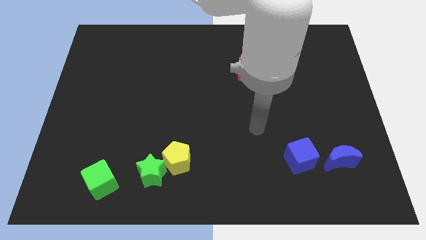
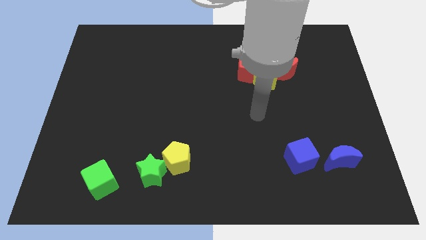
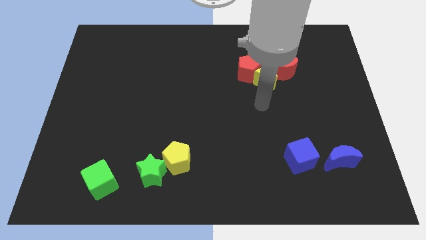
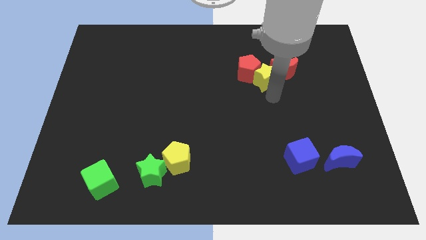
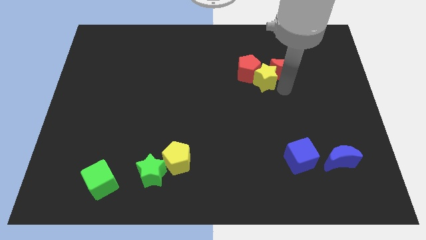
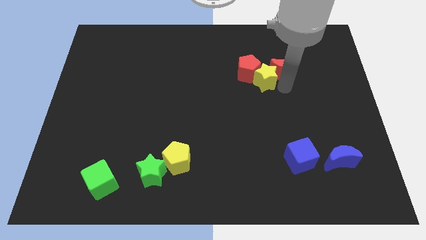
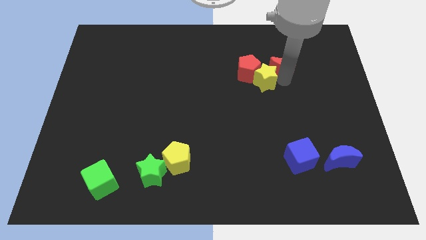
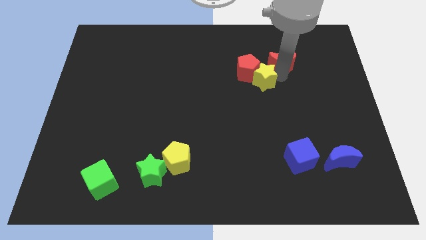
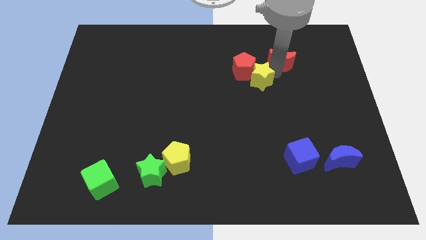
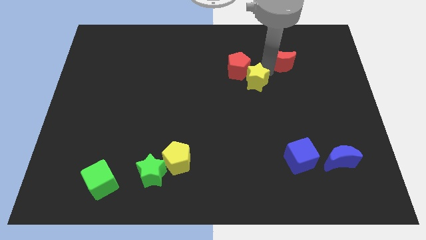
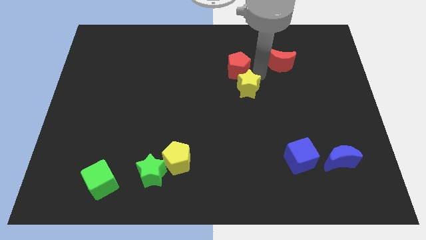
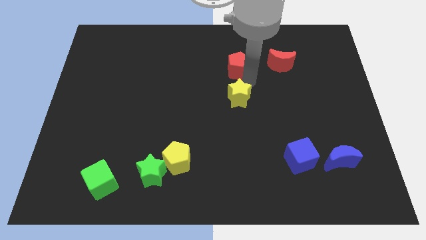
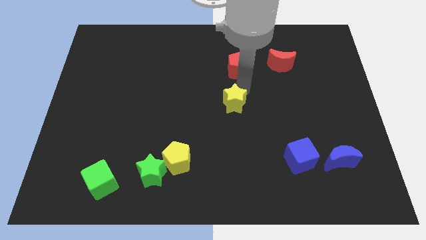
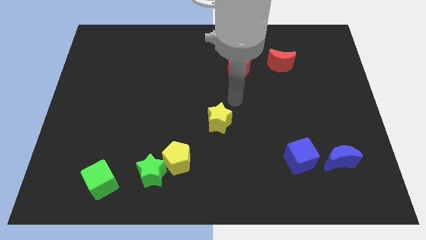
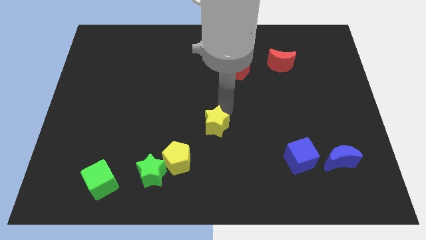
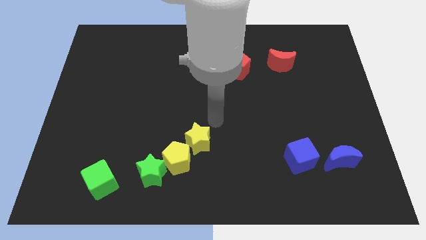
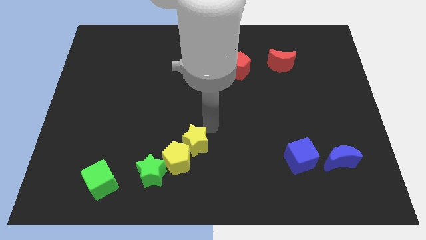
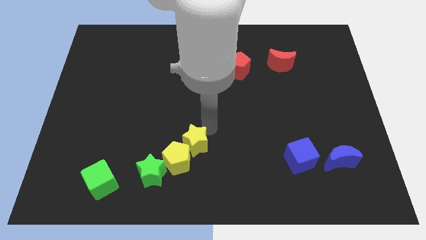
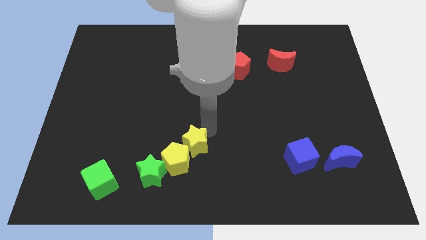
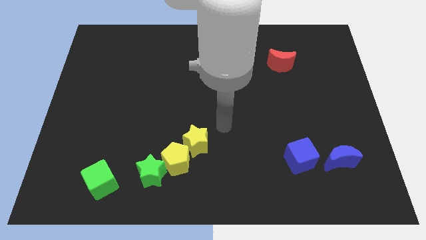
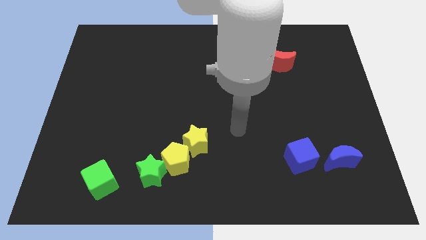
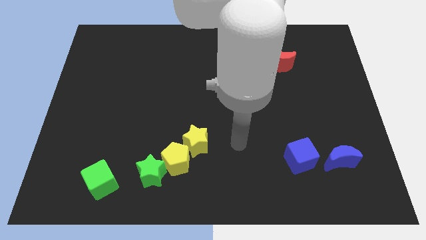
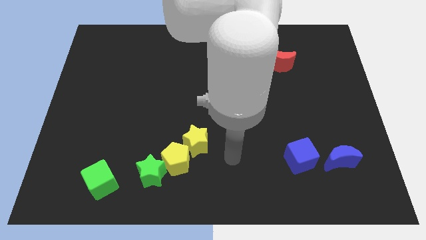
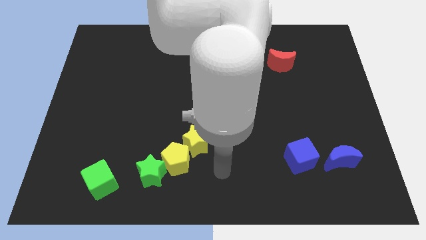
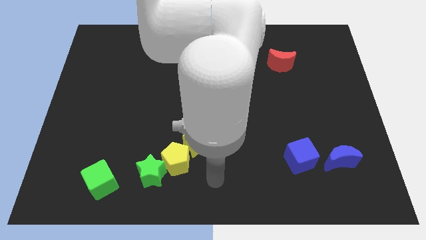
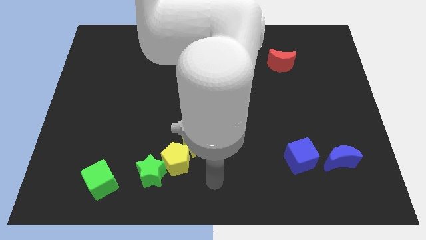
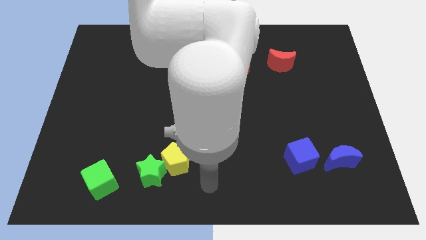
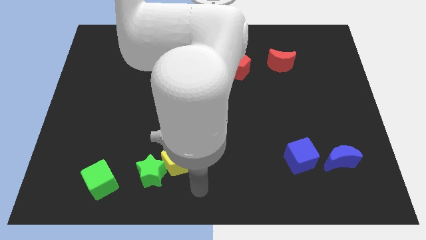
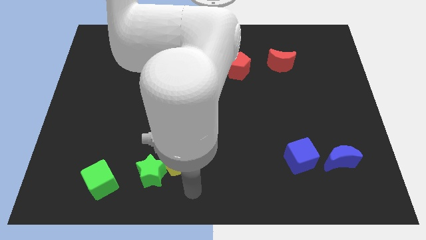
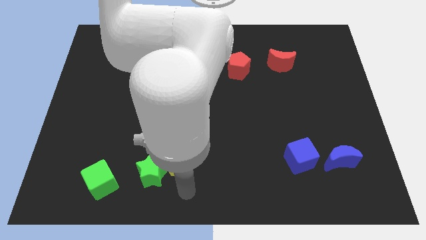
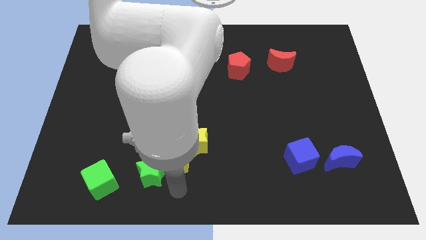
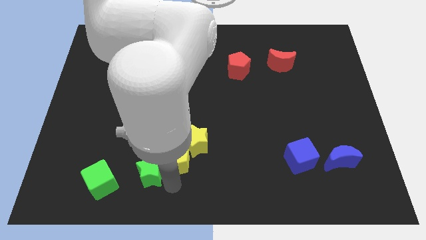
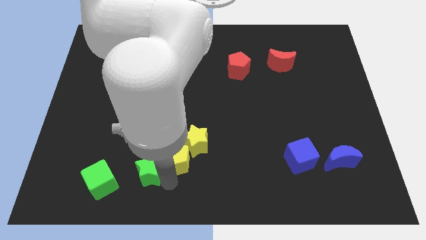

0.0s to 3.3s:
slide the yellow star into the yellow pentagon

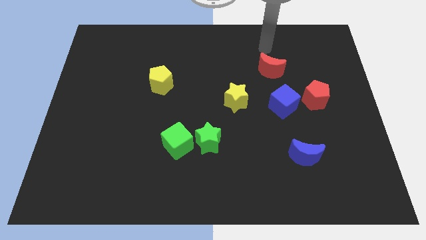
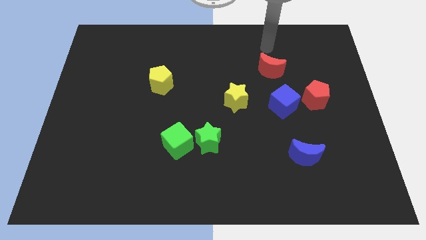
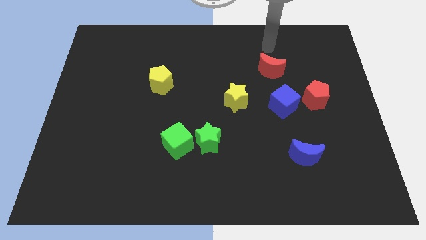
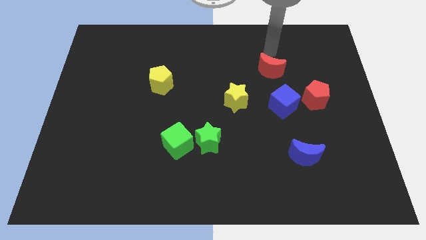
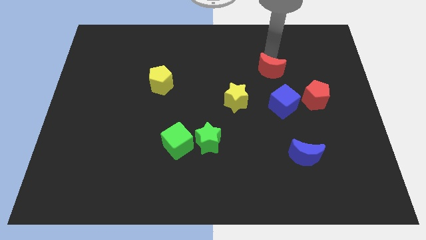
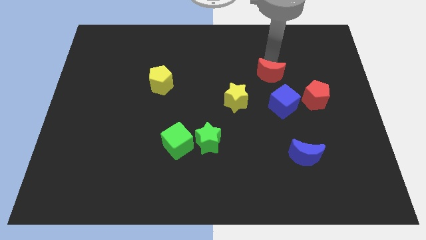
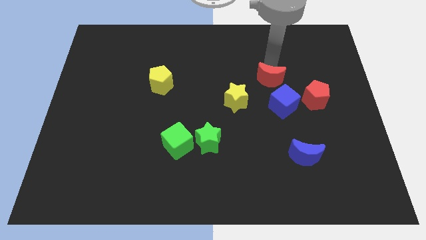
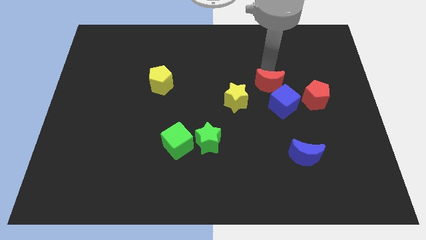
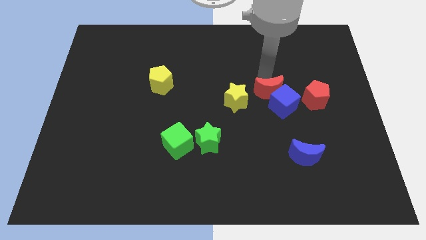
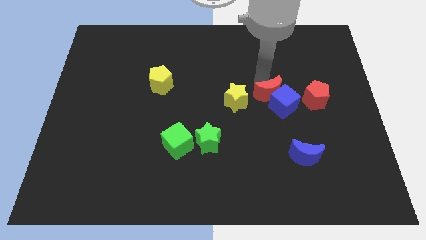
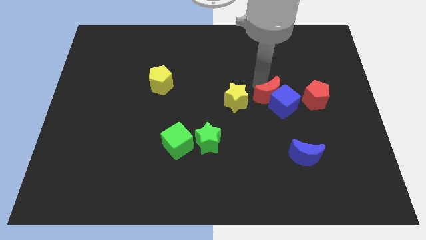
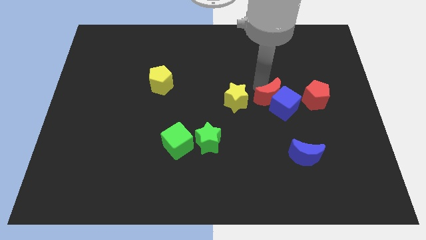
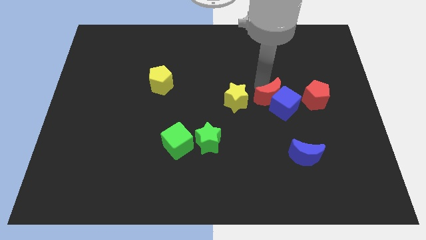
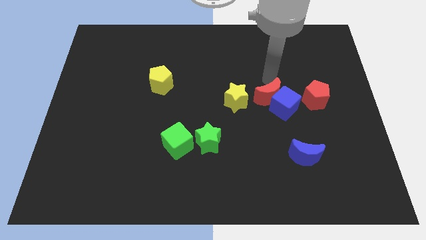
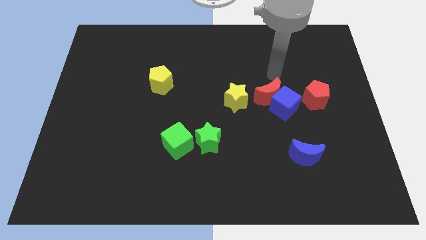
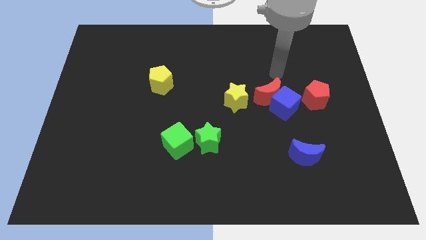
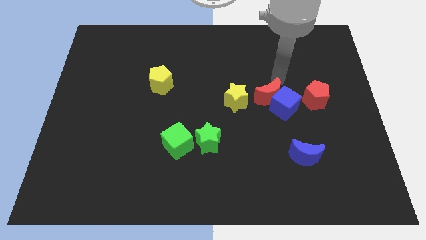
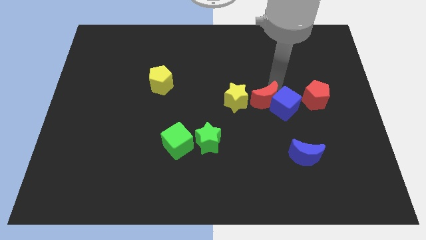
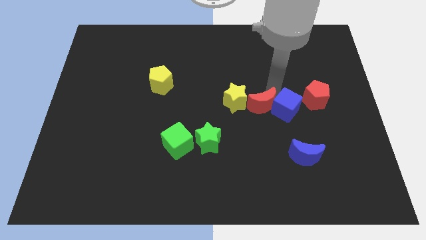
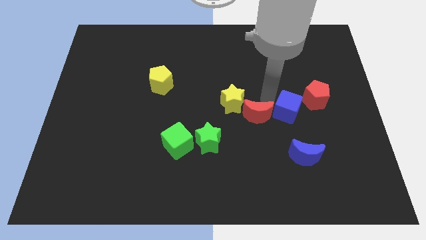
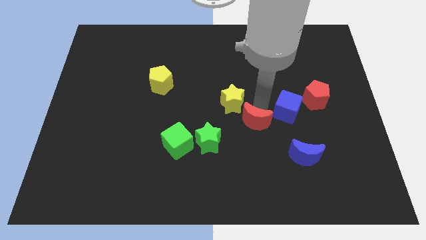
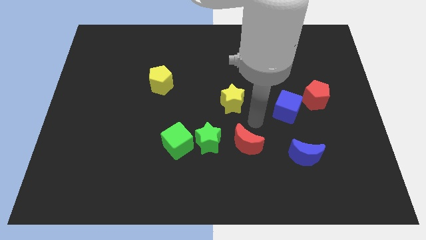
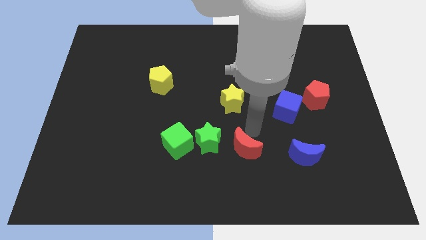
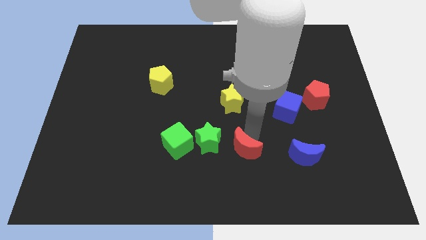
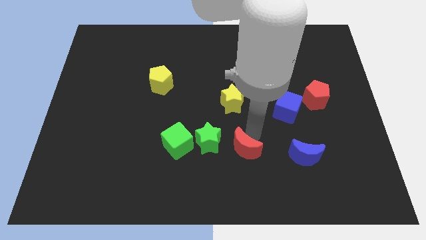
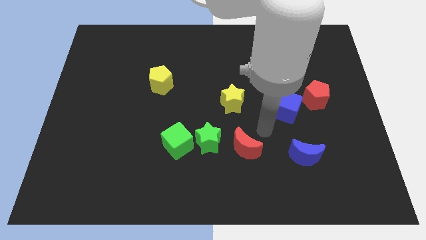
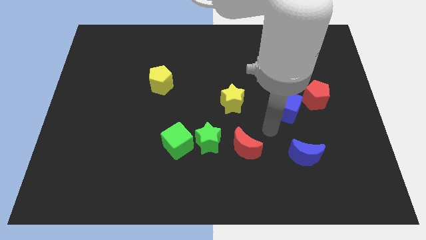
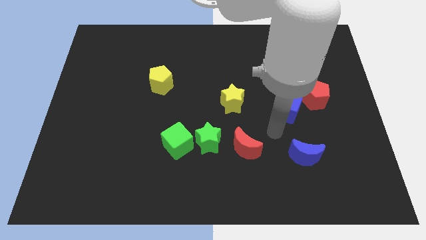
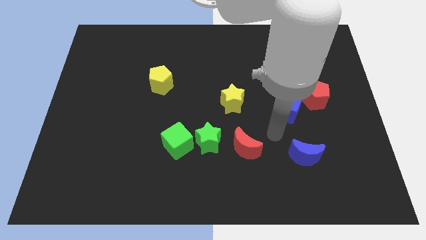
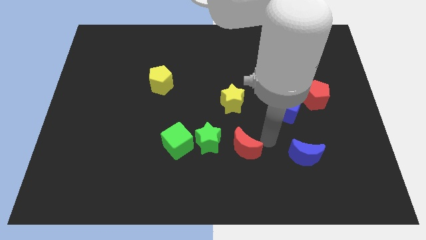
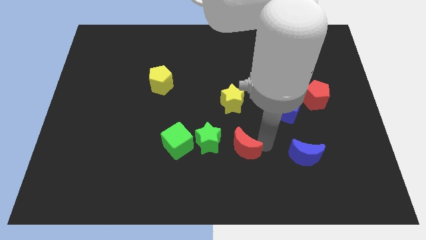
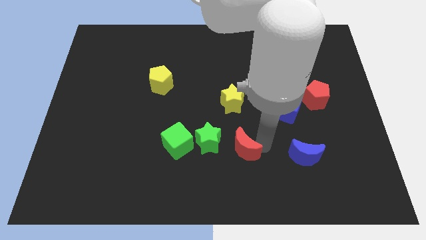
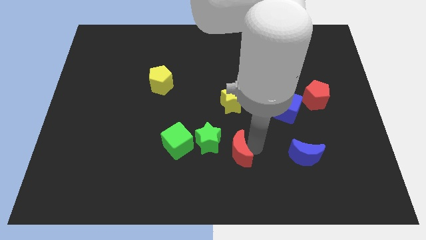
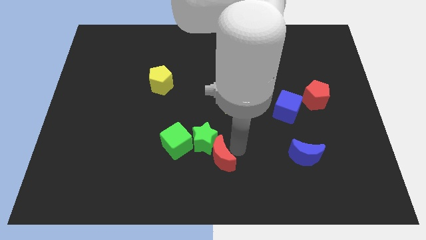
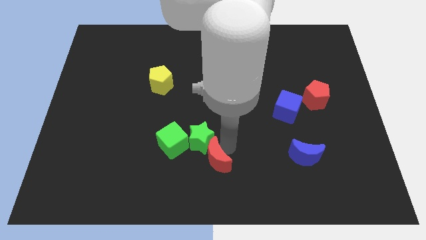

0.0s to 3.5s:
drag the red moon and place it below the green star

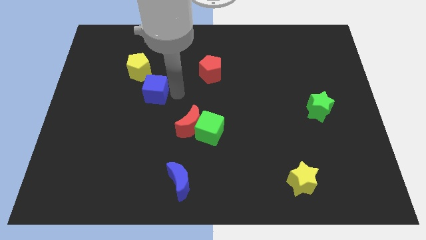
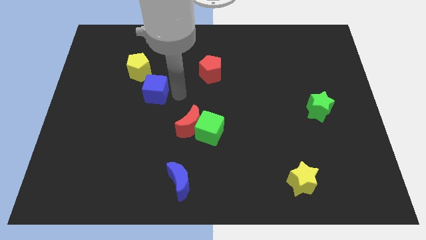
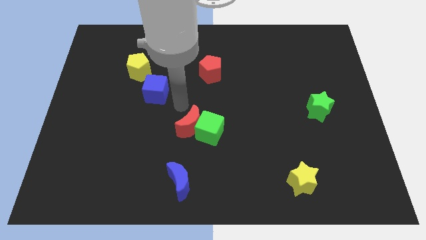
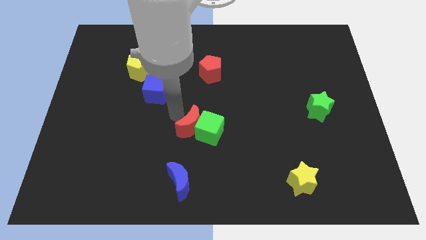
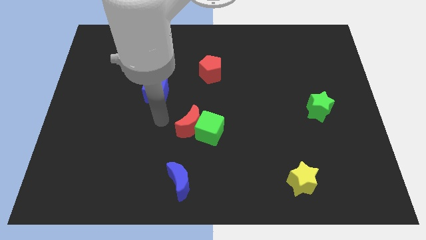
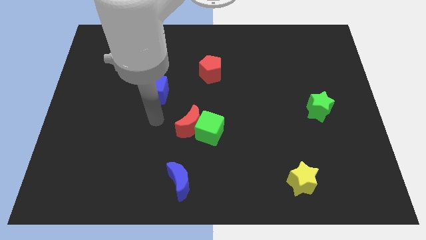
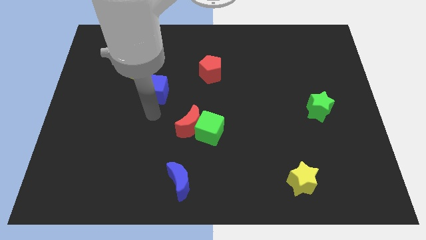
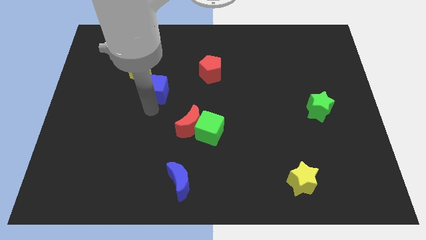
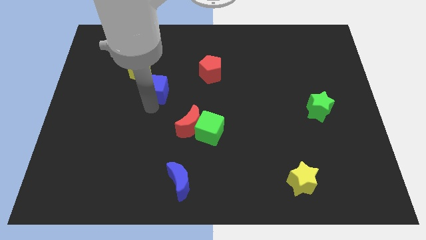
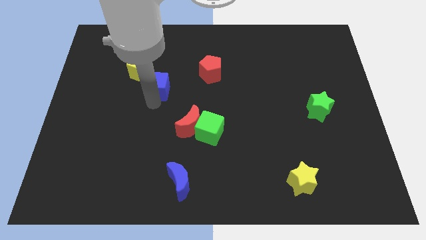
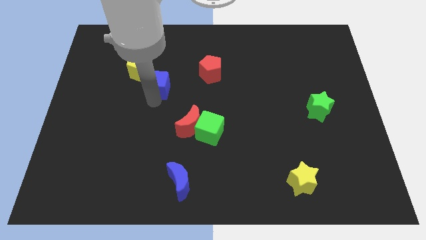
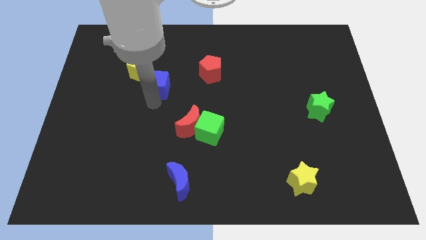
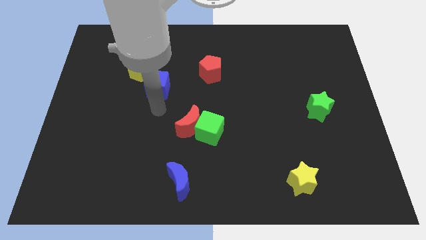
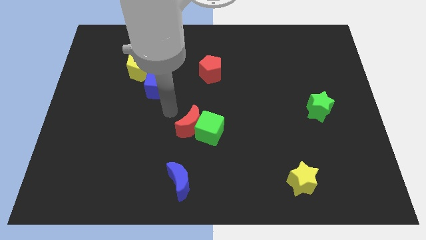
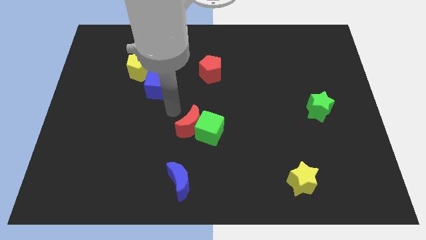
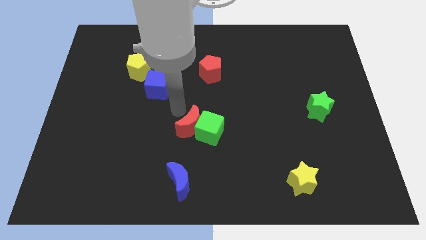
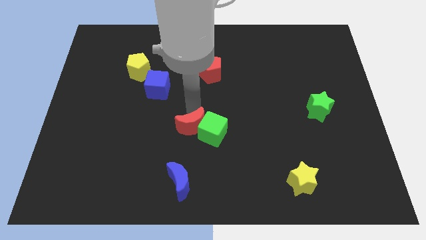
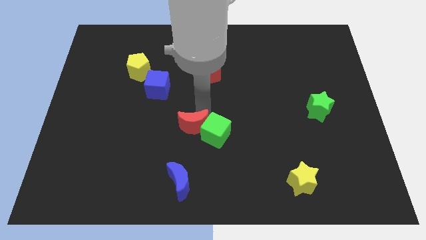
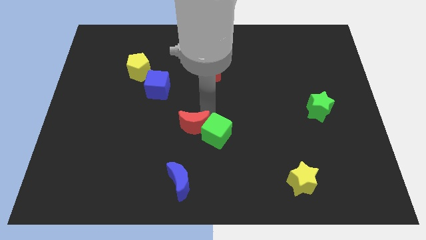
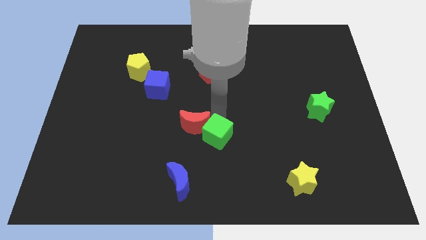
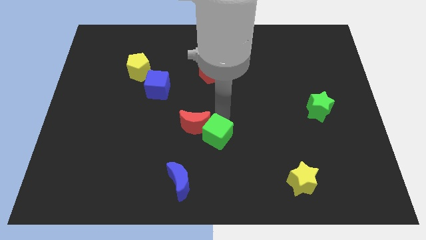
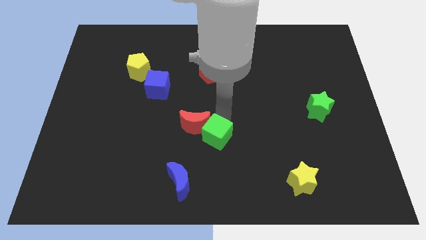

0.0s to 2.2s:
place the arm at the upper side of the green cube
